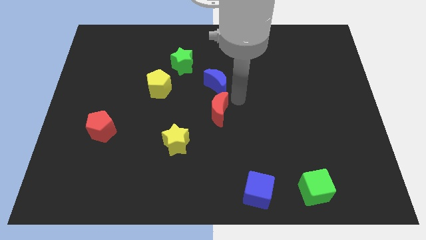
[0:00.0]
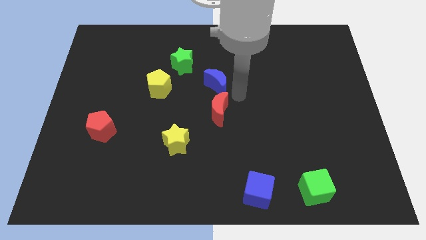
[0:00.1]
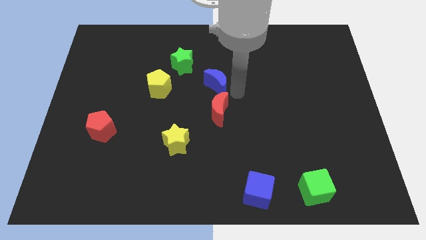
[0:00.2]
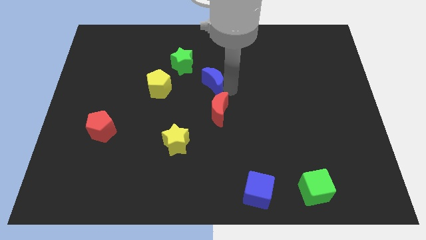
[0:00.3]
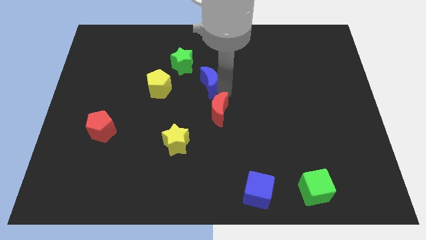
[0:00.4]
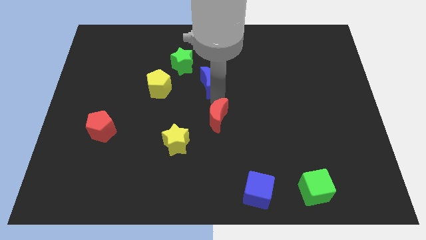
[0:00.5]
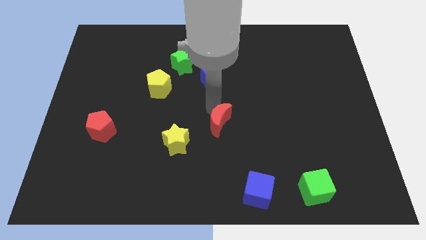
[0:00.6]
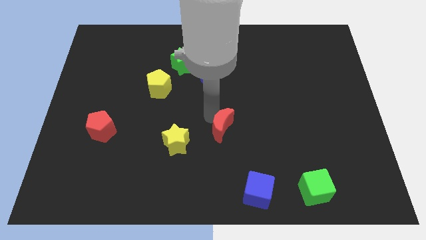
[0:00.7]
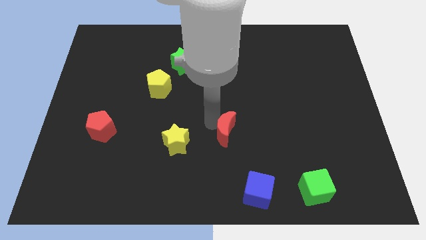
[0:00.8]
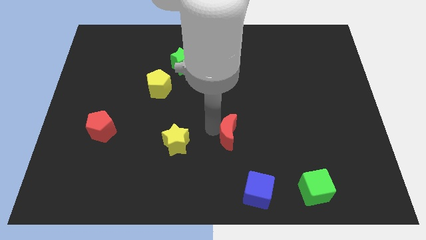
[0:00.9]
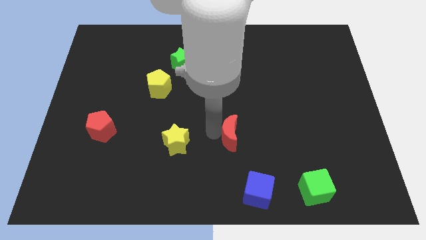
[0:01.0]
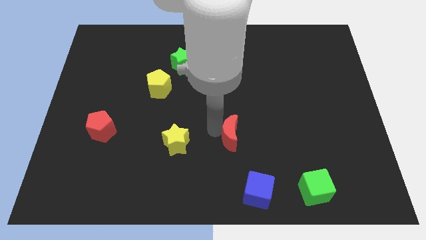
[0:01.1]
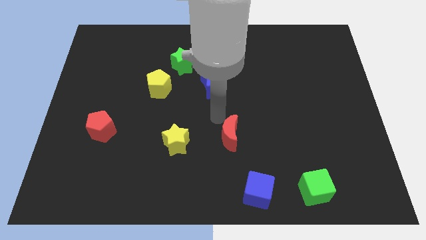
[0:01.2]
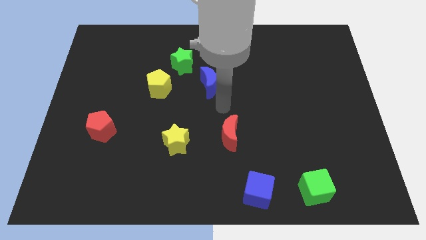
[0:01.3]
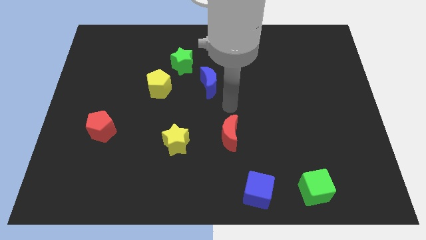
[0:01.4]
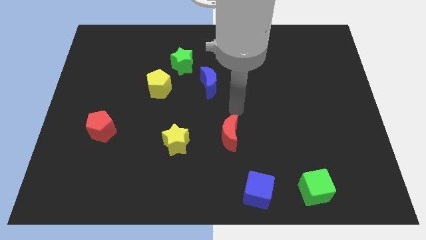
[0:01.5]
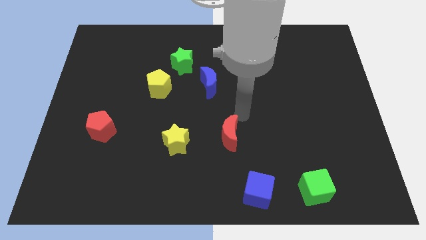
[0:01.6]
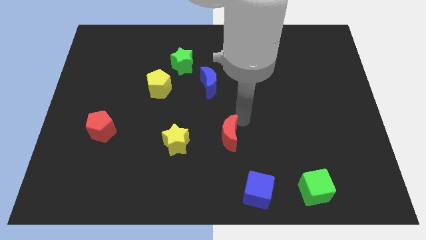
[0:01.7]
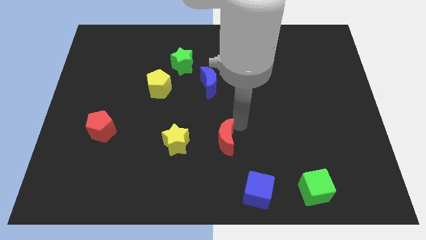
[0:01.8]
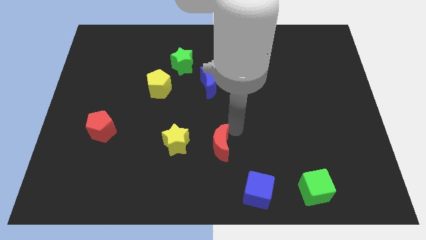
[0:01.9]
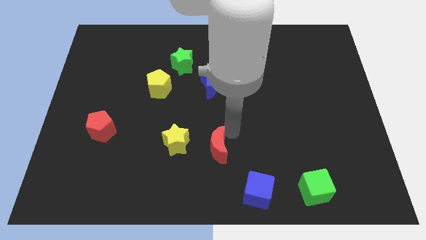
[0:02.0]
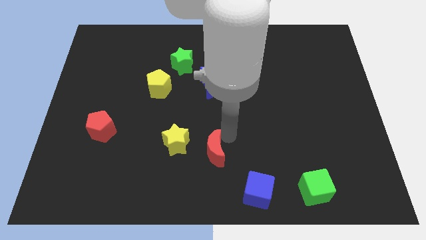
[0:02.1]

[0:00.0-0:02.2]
separate the red crescent from blue crescent

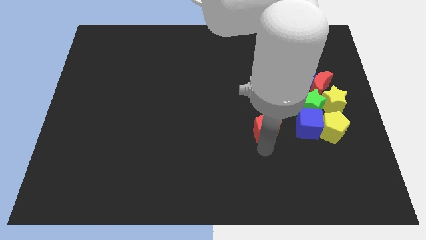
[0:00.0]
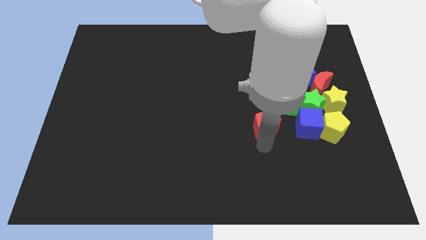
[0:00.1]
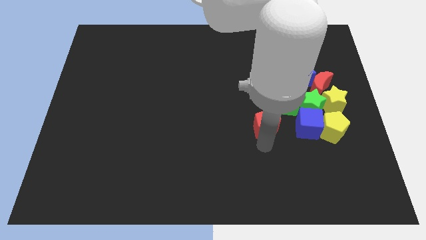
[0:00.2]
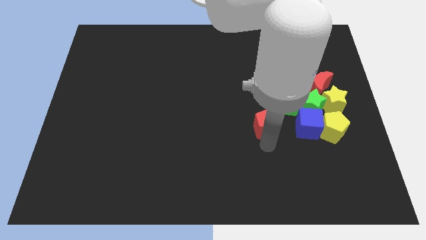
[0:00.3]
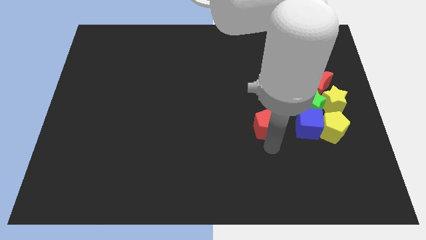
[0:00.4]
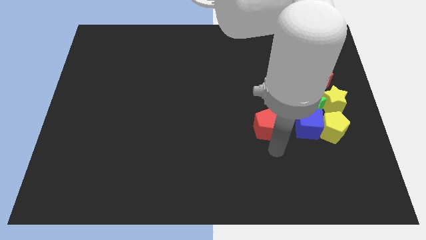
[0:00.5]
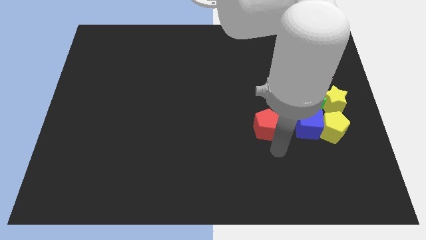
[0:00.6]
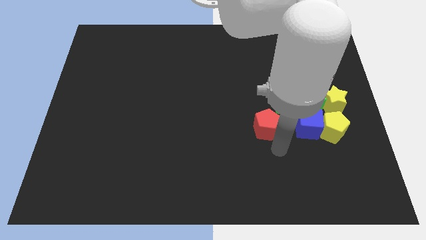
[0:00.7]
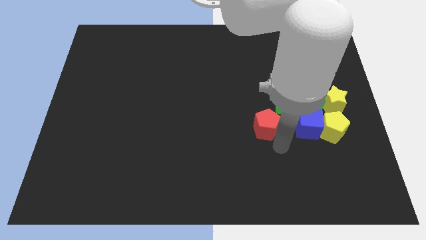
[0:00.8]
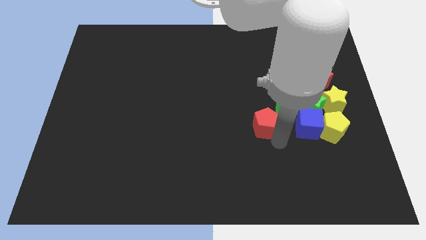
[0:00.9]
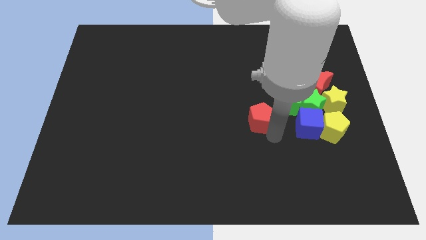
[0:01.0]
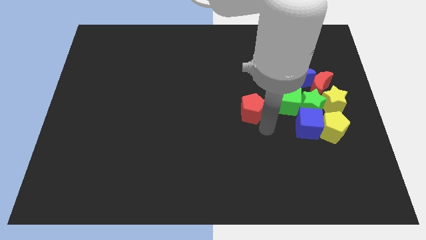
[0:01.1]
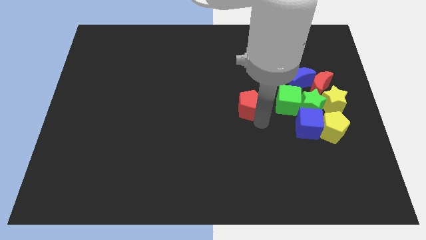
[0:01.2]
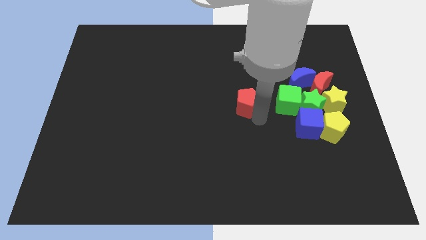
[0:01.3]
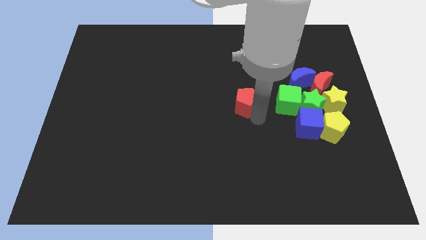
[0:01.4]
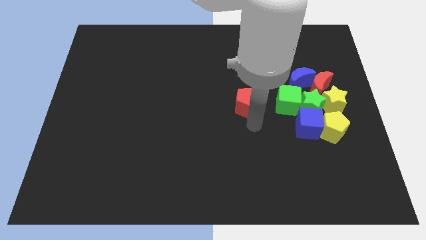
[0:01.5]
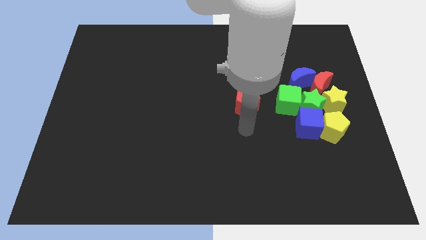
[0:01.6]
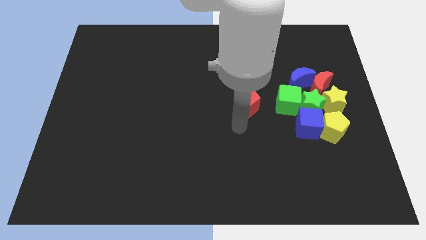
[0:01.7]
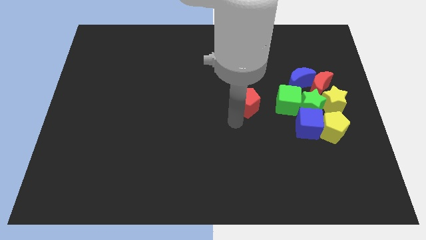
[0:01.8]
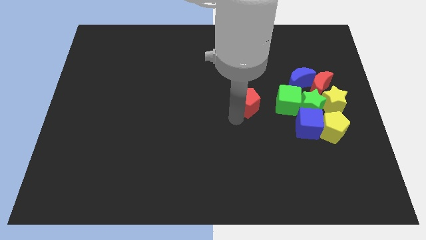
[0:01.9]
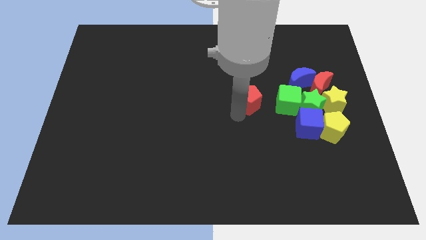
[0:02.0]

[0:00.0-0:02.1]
place red pentagon parallel to green cube

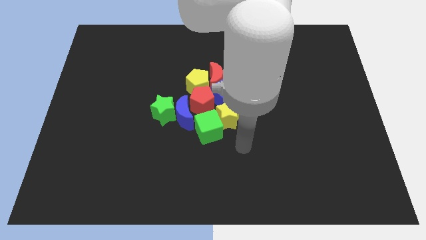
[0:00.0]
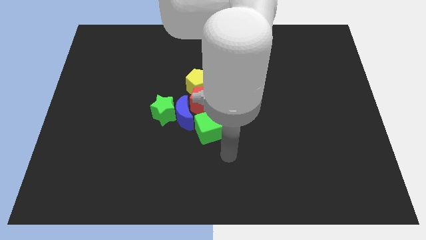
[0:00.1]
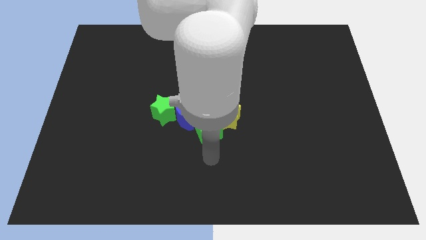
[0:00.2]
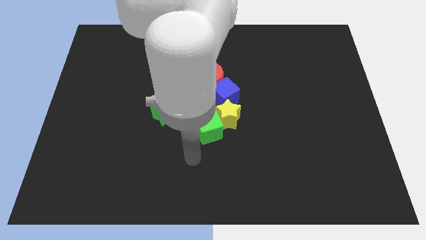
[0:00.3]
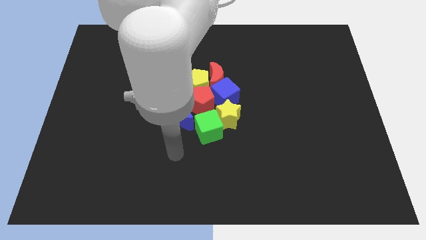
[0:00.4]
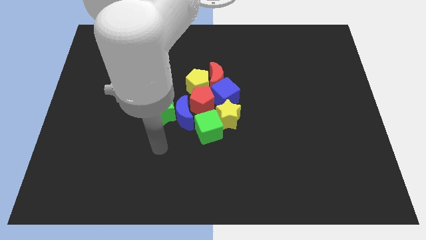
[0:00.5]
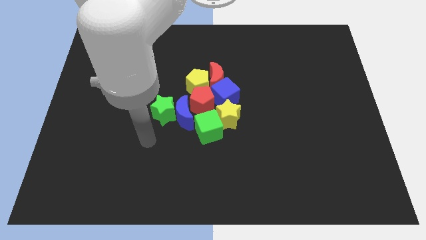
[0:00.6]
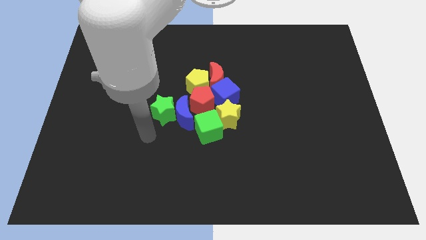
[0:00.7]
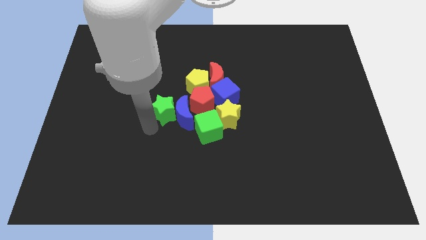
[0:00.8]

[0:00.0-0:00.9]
place the arm near the green star

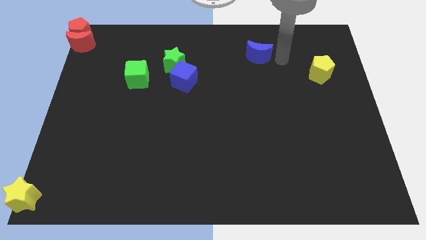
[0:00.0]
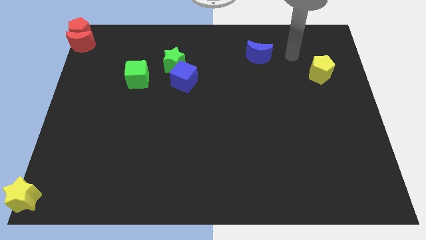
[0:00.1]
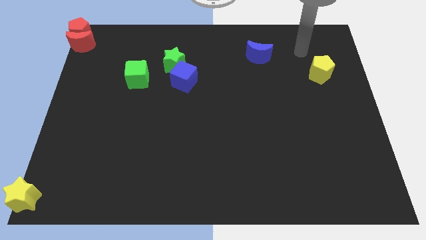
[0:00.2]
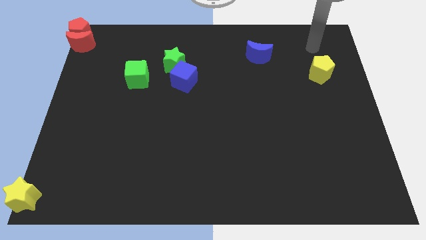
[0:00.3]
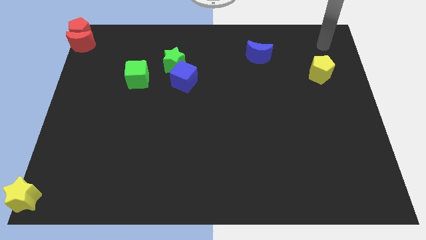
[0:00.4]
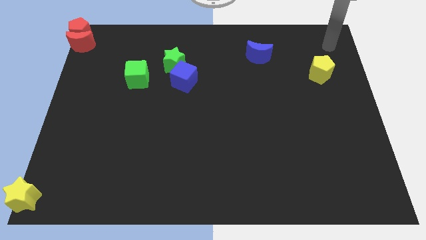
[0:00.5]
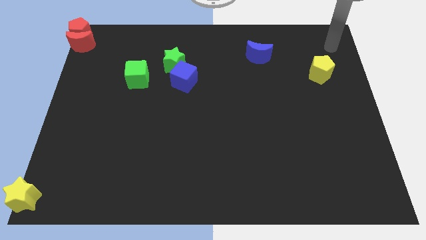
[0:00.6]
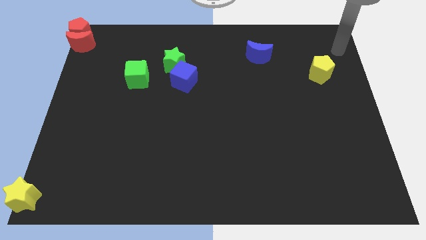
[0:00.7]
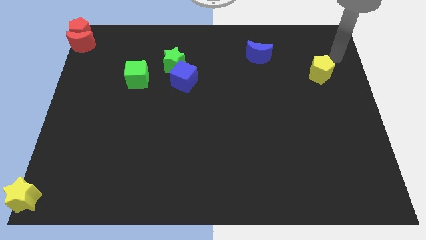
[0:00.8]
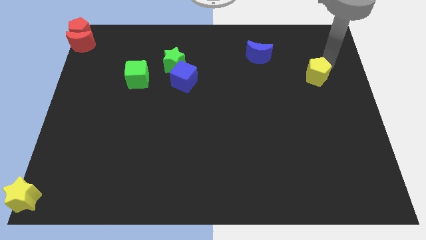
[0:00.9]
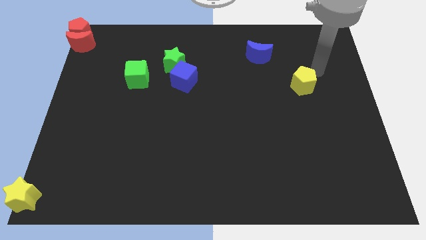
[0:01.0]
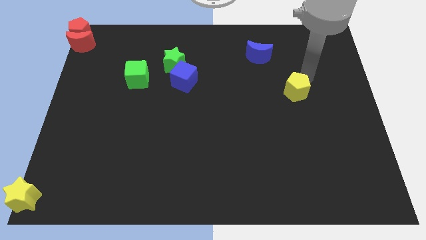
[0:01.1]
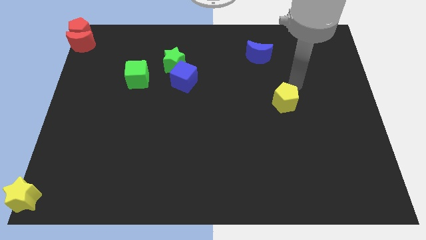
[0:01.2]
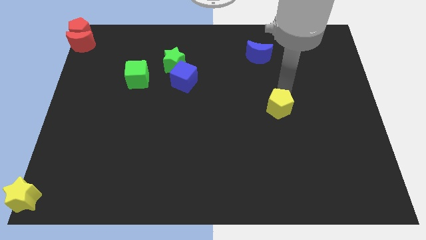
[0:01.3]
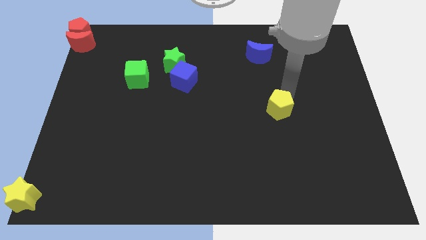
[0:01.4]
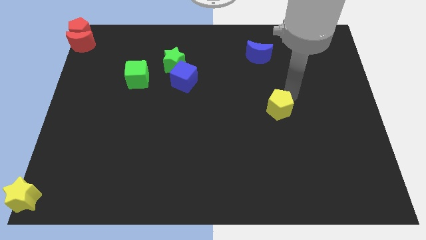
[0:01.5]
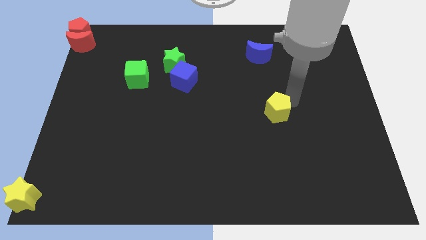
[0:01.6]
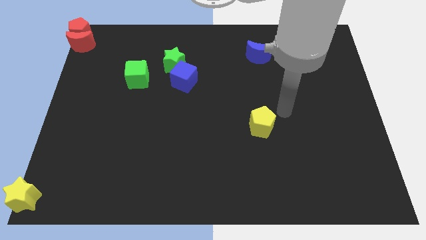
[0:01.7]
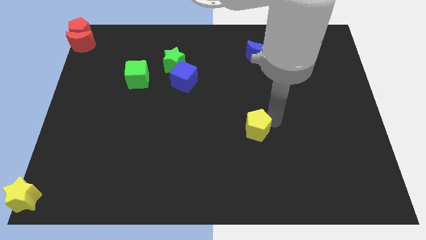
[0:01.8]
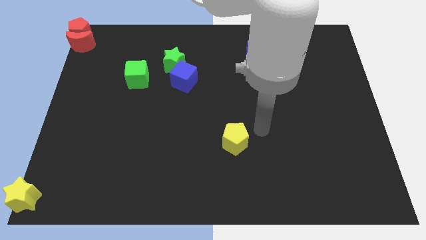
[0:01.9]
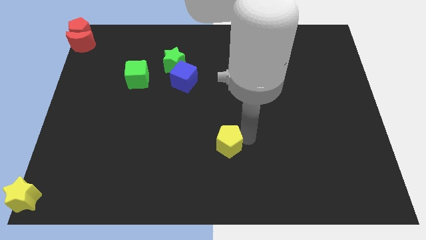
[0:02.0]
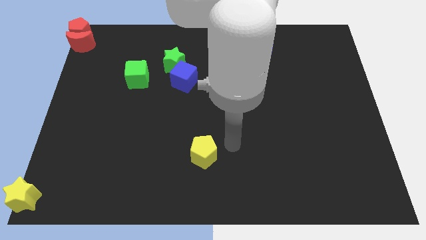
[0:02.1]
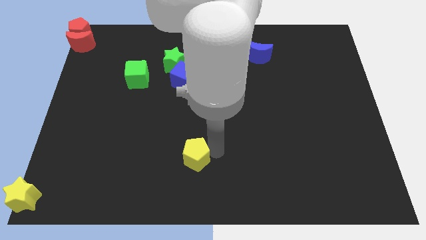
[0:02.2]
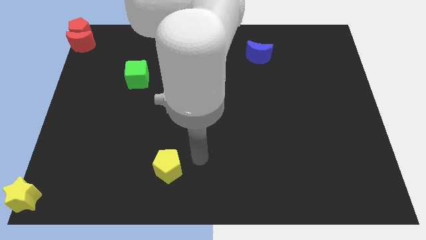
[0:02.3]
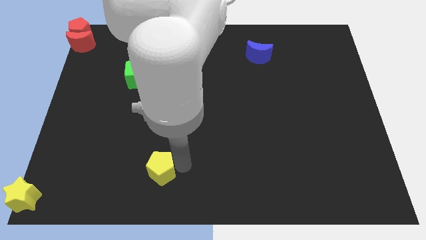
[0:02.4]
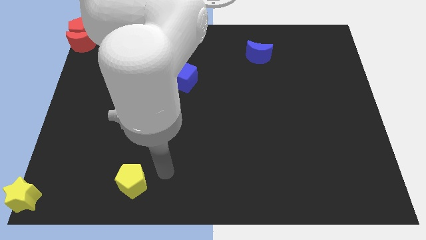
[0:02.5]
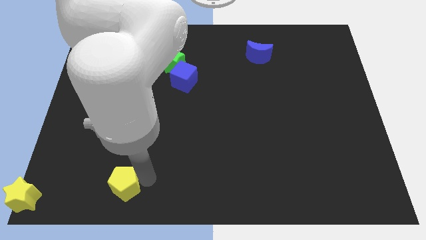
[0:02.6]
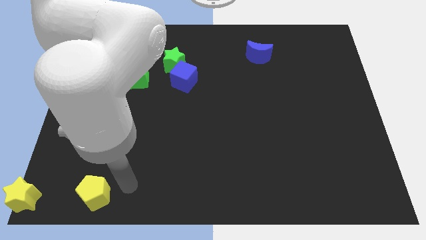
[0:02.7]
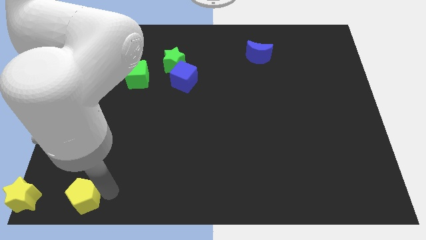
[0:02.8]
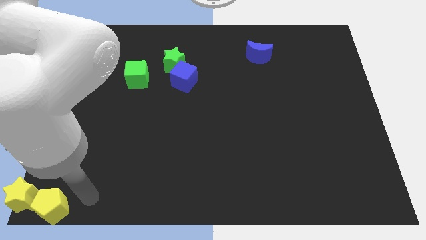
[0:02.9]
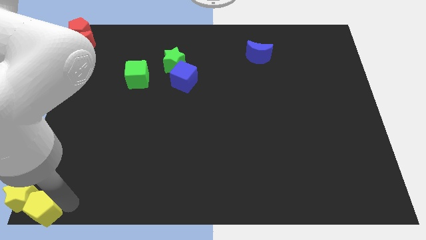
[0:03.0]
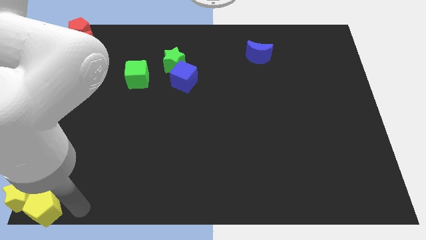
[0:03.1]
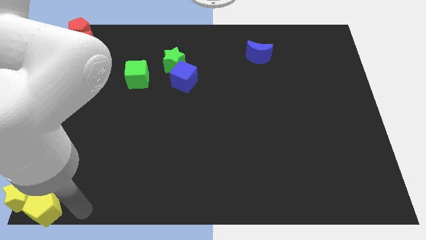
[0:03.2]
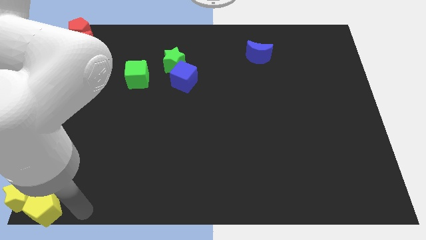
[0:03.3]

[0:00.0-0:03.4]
place yellow pentagon into the yellow star

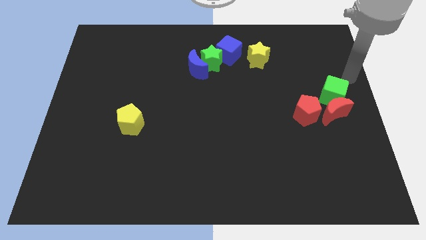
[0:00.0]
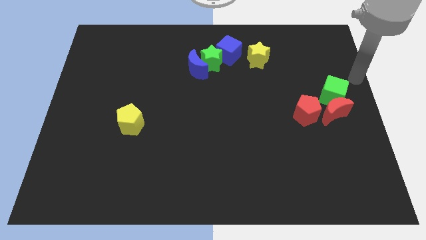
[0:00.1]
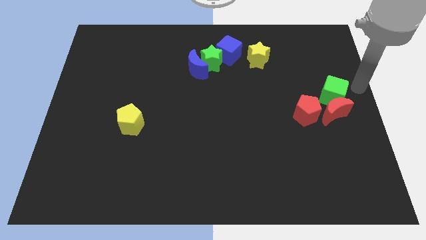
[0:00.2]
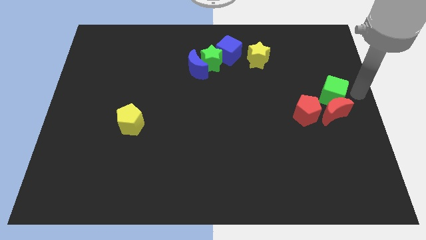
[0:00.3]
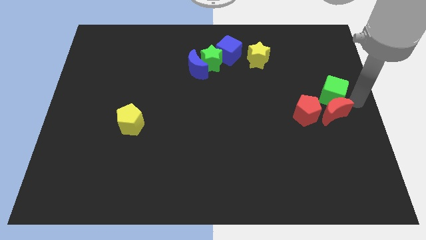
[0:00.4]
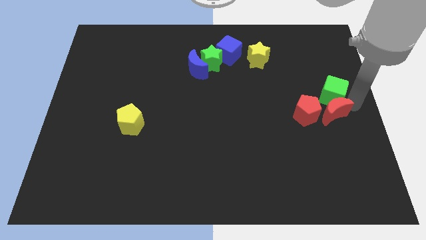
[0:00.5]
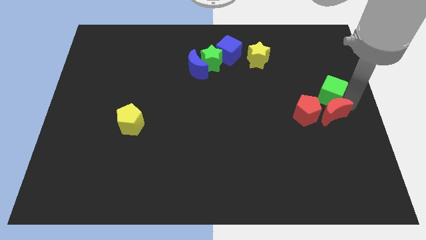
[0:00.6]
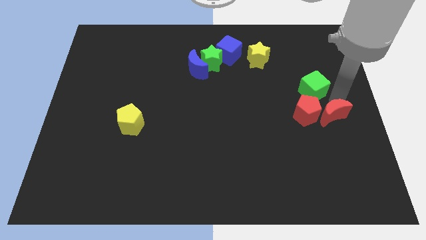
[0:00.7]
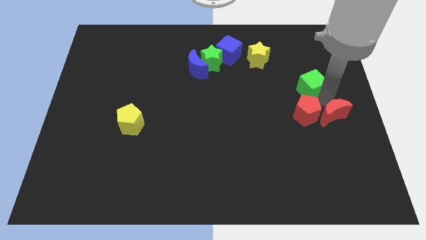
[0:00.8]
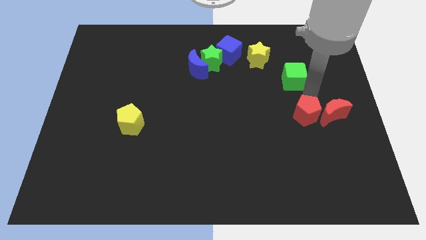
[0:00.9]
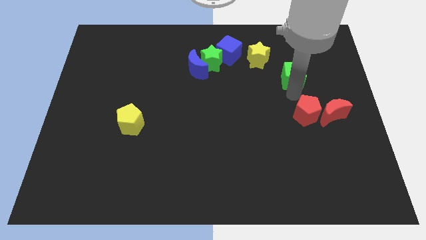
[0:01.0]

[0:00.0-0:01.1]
separate green cube from red blocks
